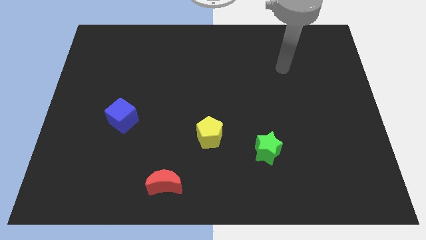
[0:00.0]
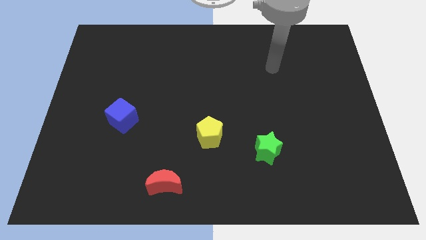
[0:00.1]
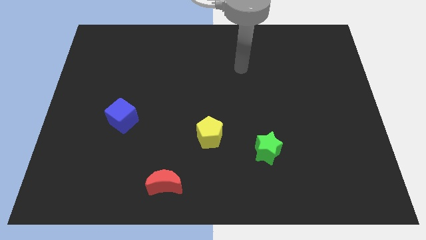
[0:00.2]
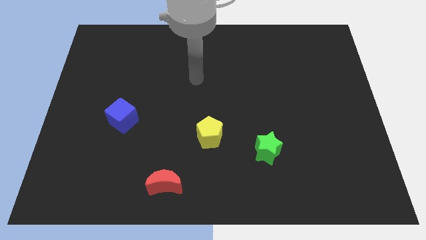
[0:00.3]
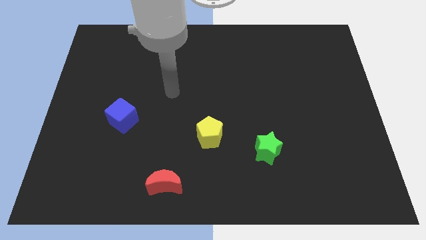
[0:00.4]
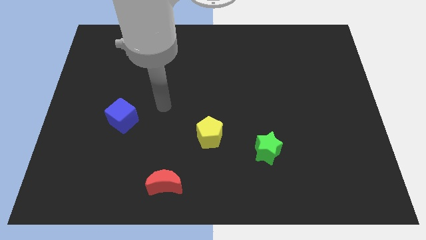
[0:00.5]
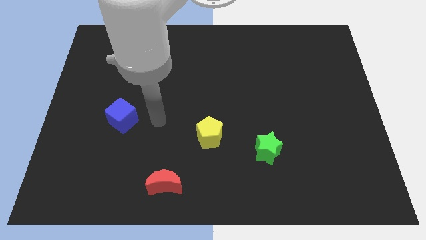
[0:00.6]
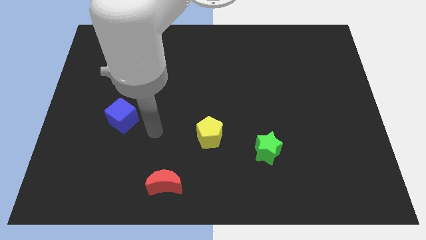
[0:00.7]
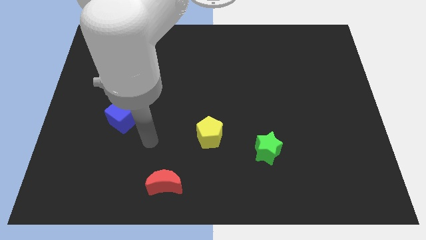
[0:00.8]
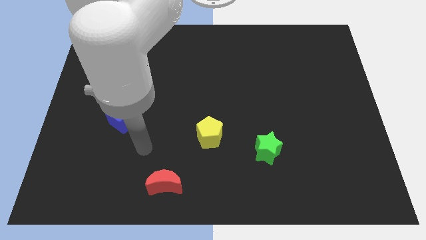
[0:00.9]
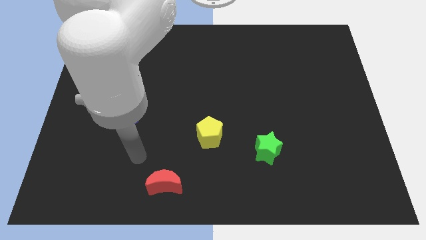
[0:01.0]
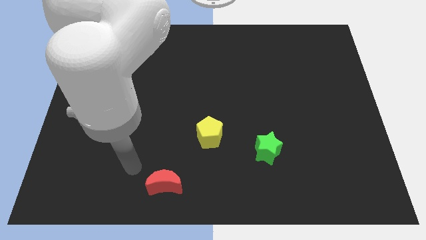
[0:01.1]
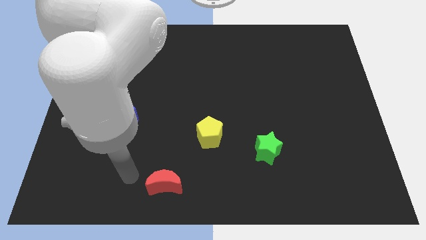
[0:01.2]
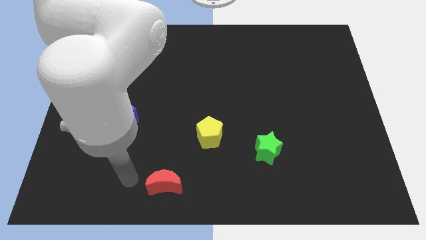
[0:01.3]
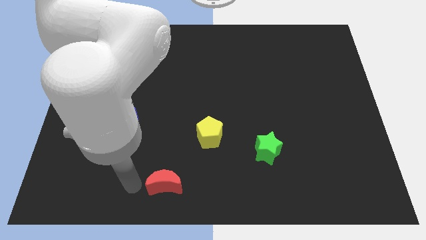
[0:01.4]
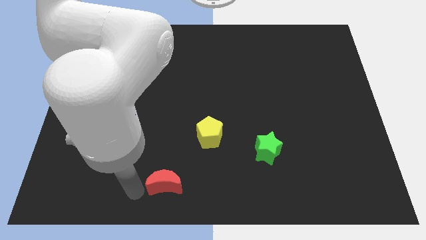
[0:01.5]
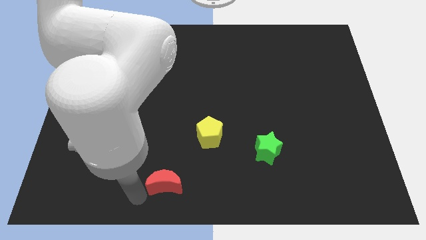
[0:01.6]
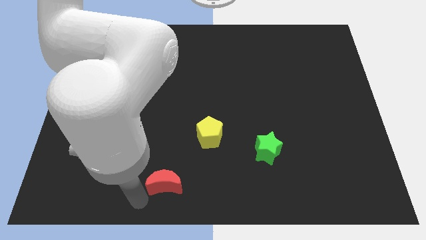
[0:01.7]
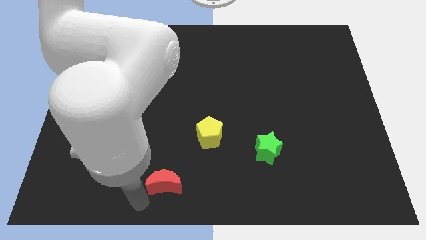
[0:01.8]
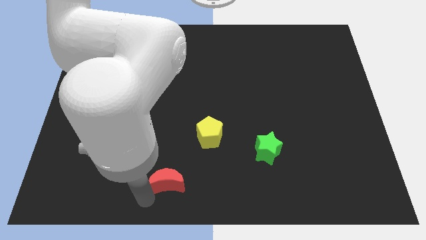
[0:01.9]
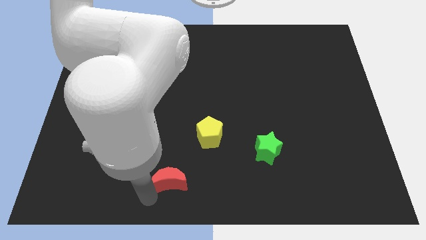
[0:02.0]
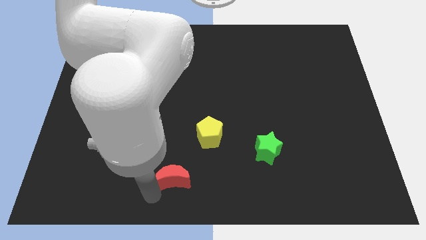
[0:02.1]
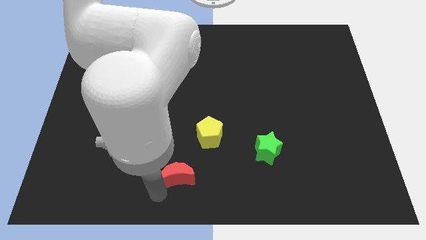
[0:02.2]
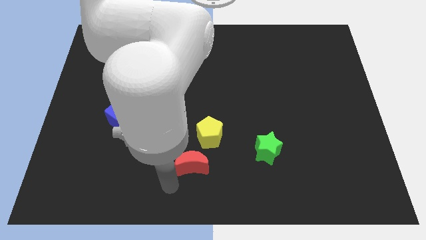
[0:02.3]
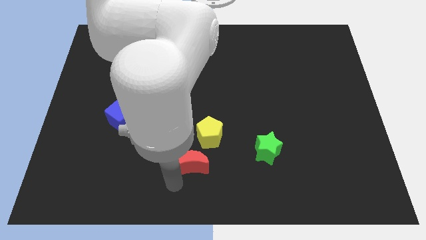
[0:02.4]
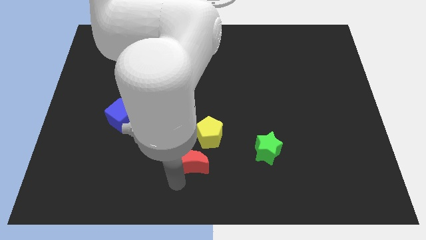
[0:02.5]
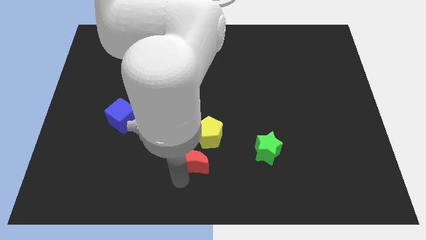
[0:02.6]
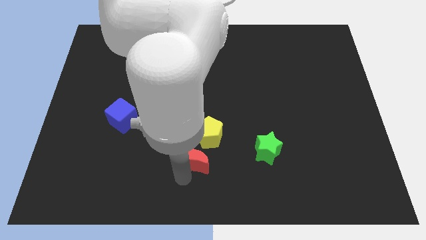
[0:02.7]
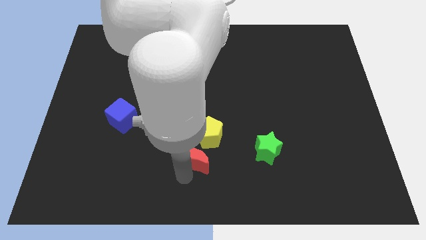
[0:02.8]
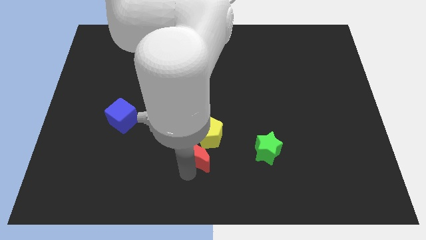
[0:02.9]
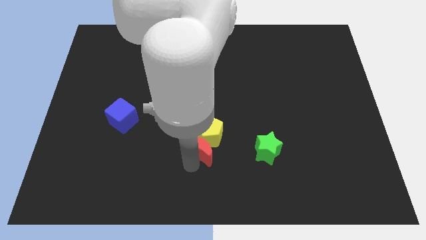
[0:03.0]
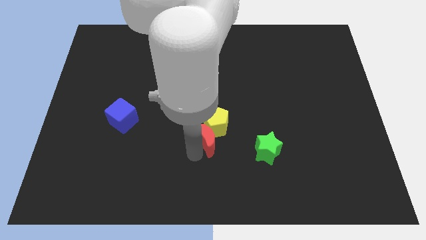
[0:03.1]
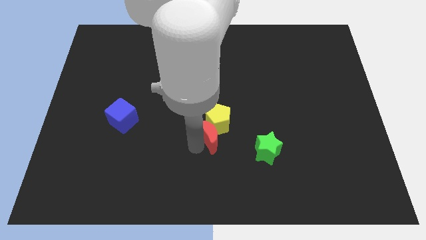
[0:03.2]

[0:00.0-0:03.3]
slide the red block to the pentagon

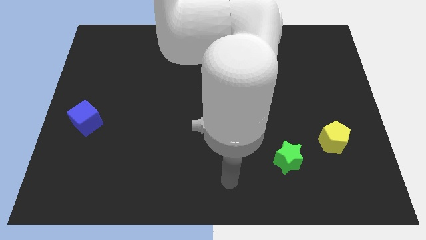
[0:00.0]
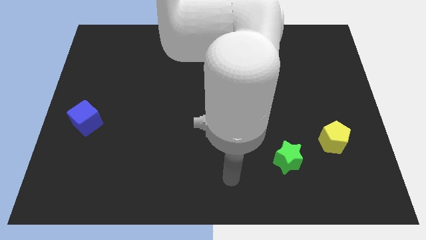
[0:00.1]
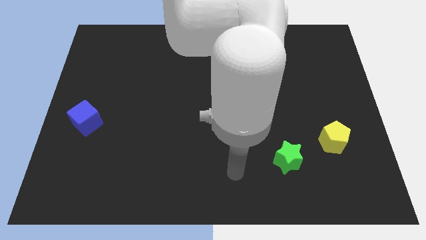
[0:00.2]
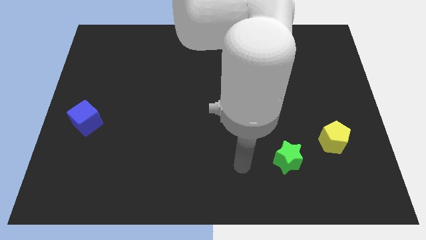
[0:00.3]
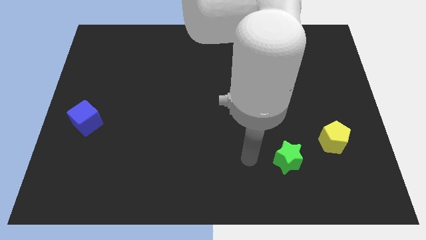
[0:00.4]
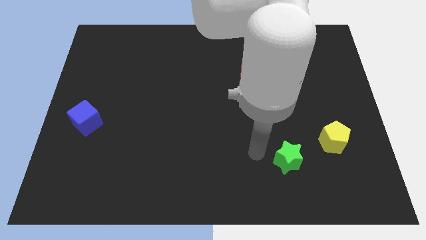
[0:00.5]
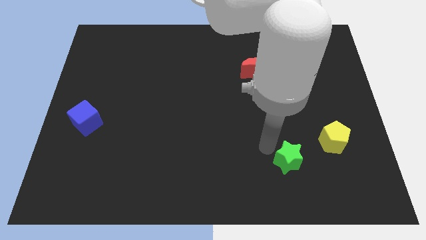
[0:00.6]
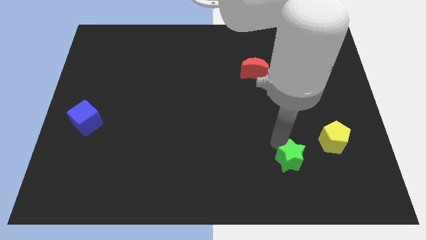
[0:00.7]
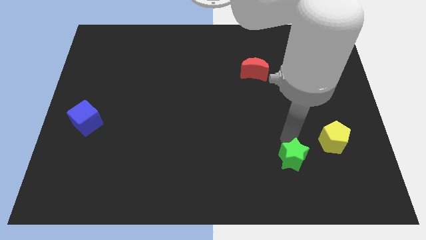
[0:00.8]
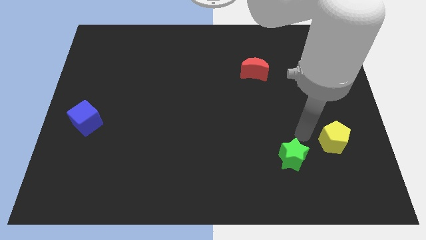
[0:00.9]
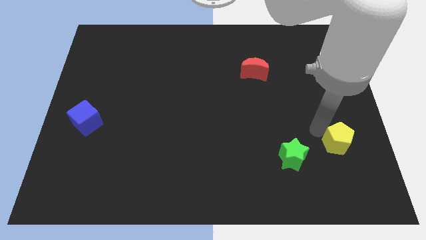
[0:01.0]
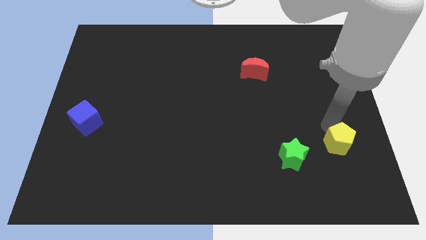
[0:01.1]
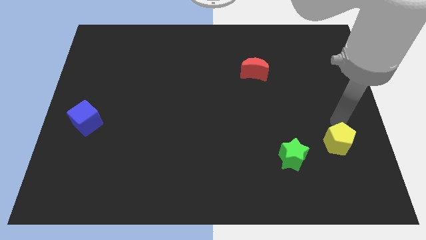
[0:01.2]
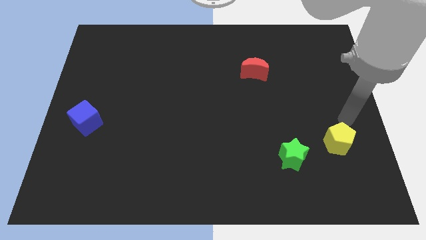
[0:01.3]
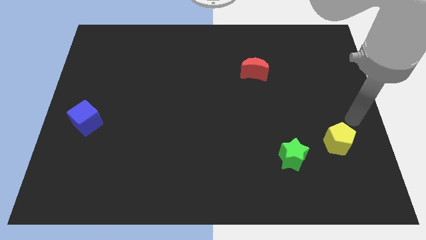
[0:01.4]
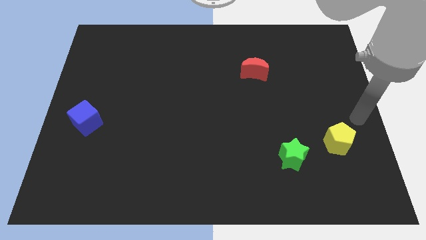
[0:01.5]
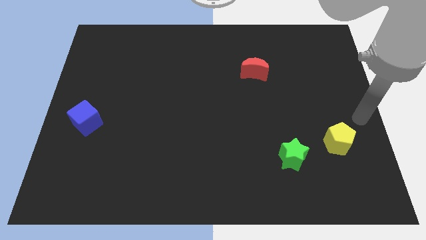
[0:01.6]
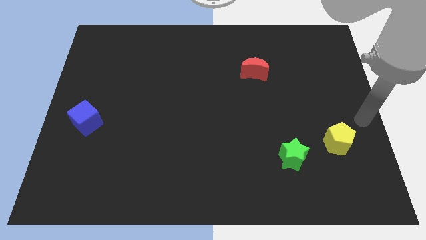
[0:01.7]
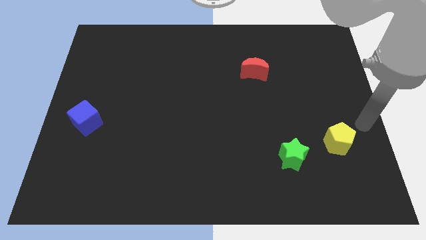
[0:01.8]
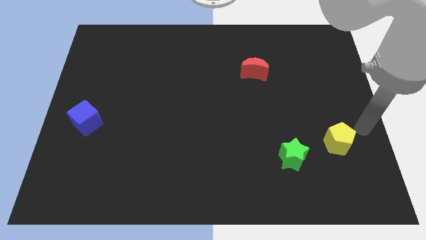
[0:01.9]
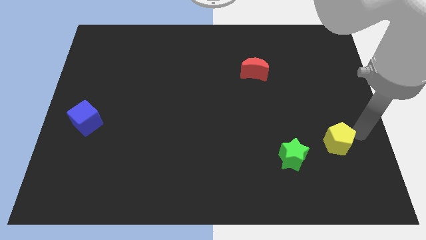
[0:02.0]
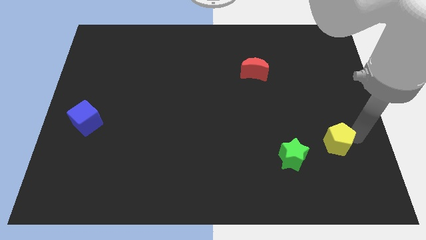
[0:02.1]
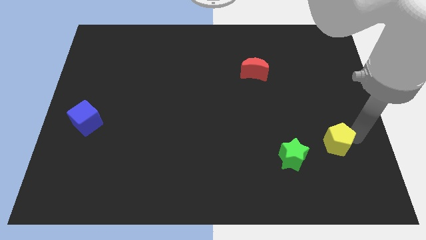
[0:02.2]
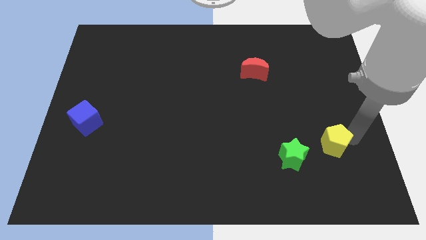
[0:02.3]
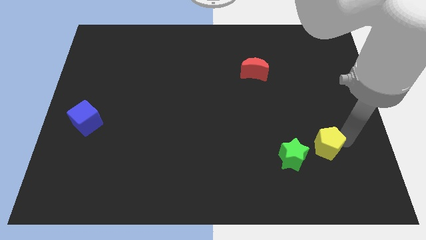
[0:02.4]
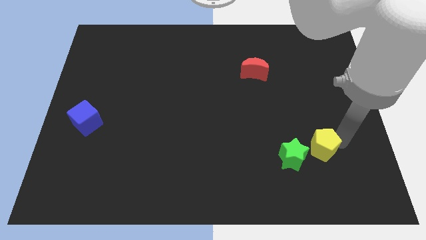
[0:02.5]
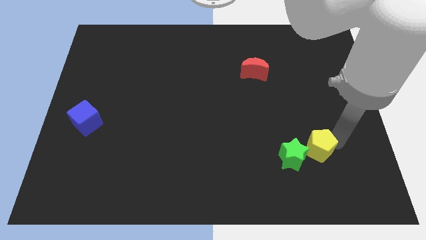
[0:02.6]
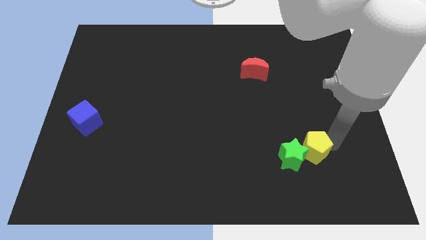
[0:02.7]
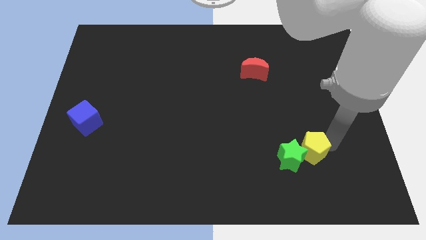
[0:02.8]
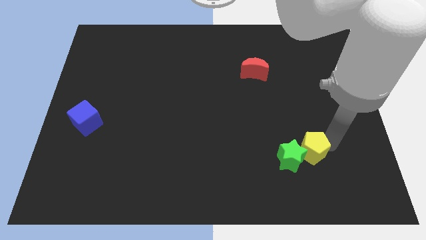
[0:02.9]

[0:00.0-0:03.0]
push the yellow block close to the green block

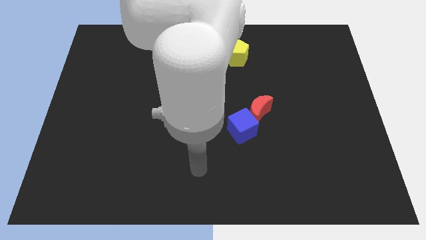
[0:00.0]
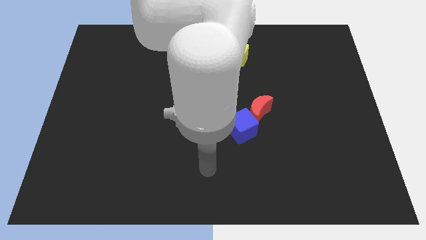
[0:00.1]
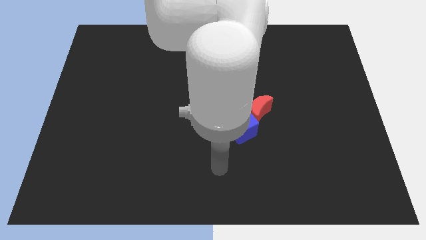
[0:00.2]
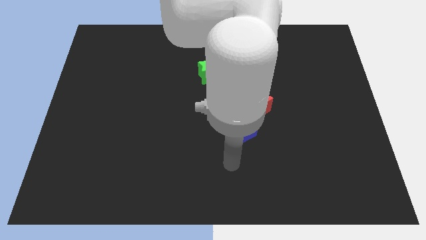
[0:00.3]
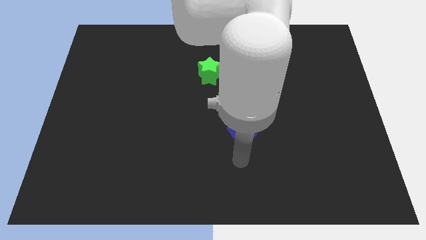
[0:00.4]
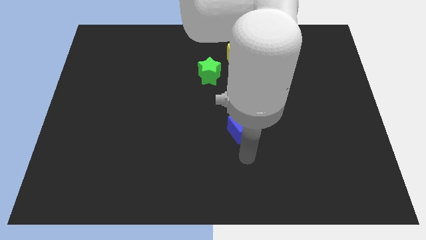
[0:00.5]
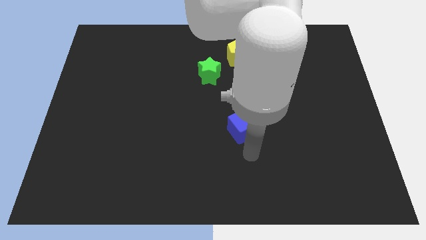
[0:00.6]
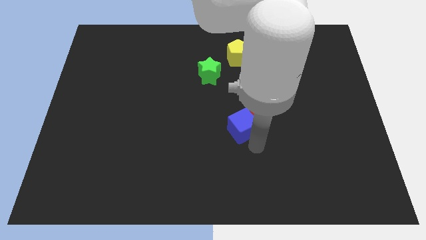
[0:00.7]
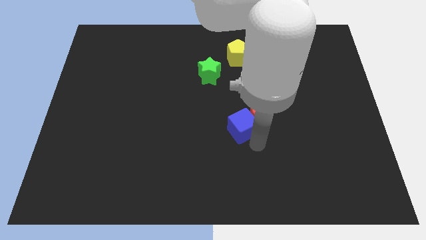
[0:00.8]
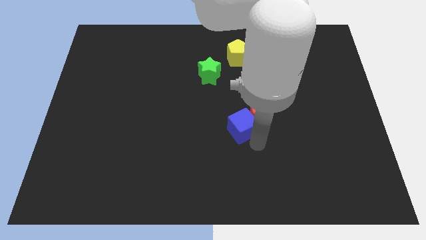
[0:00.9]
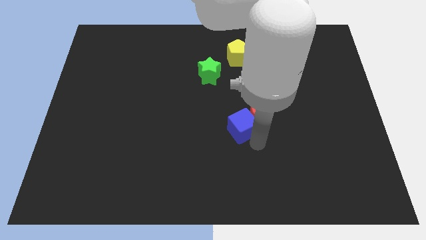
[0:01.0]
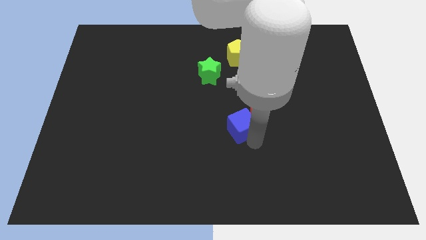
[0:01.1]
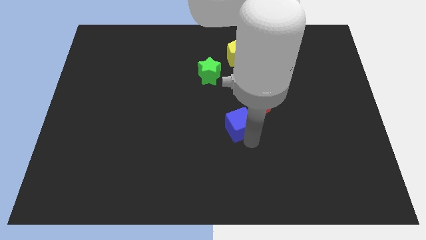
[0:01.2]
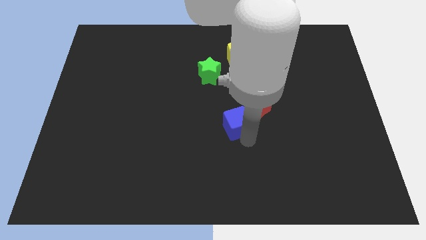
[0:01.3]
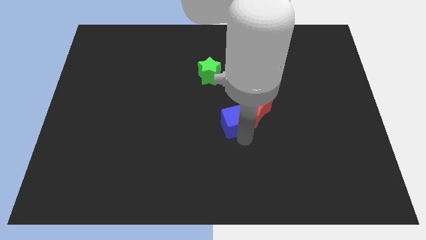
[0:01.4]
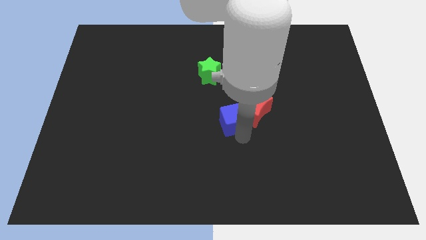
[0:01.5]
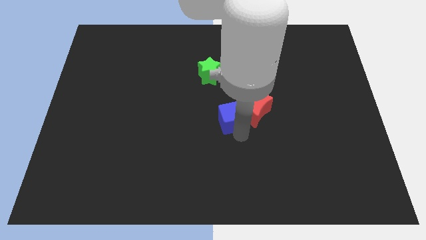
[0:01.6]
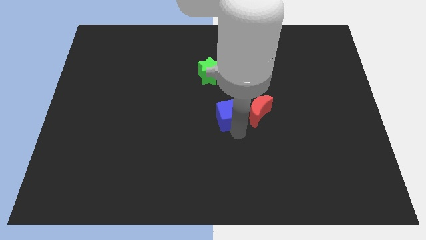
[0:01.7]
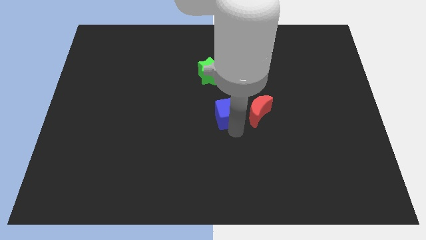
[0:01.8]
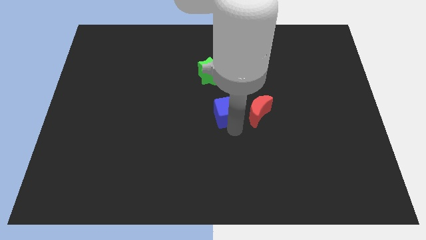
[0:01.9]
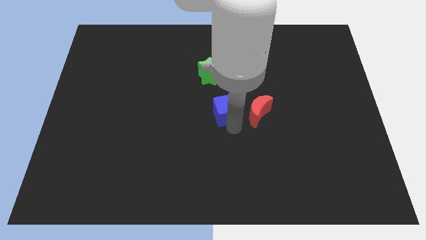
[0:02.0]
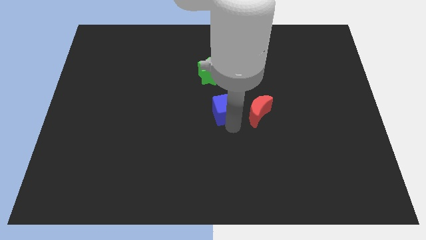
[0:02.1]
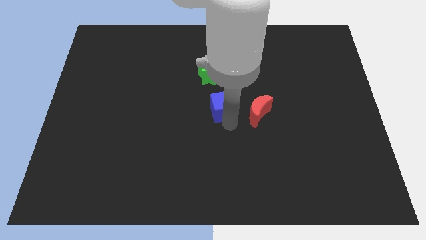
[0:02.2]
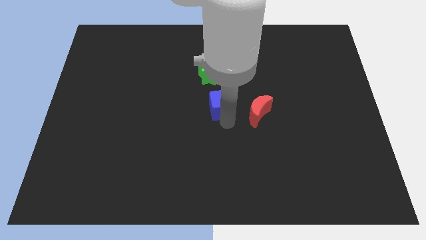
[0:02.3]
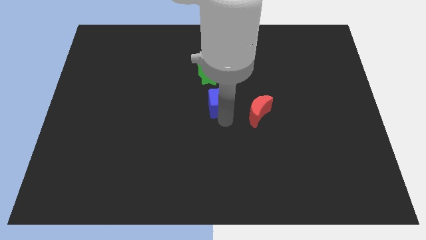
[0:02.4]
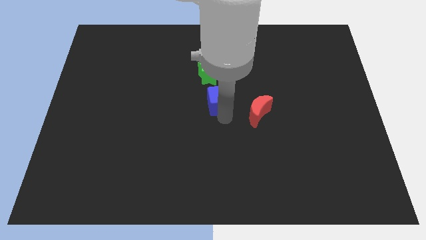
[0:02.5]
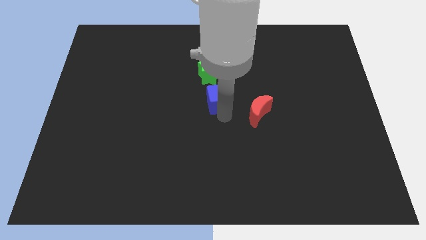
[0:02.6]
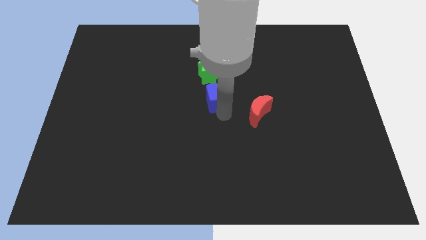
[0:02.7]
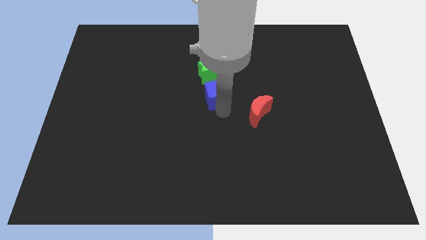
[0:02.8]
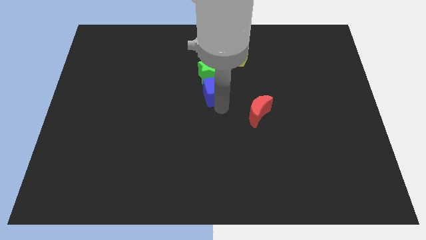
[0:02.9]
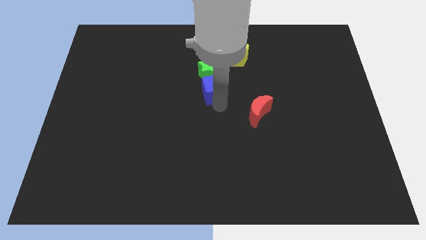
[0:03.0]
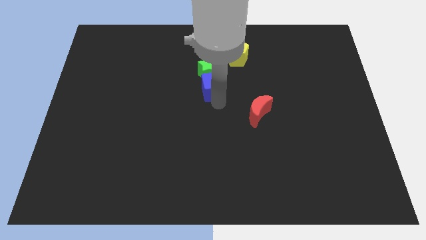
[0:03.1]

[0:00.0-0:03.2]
push the blue block to the green star
